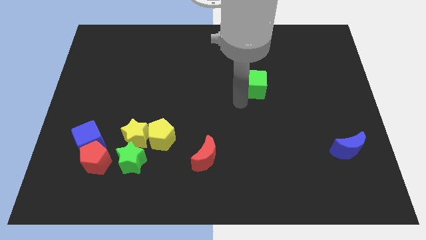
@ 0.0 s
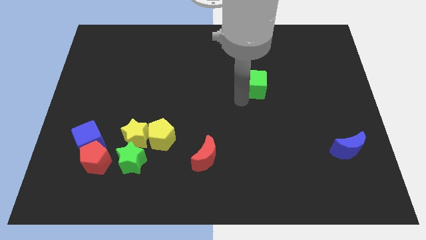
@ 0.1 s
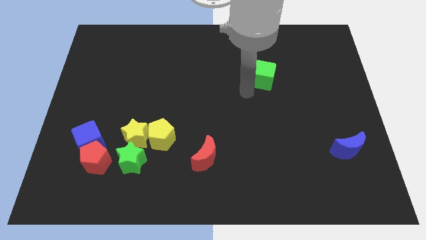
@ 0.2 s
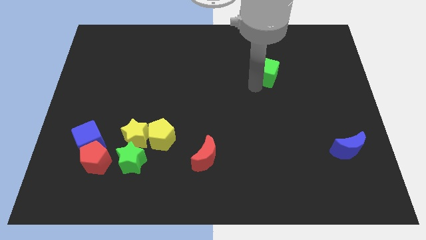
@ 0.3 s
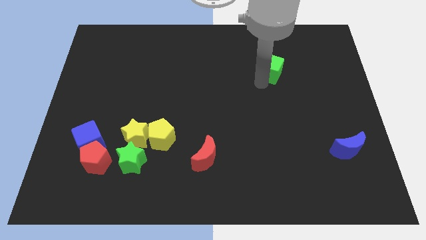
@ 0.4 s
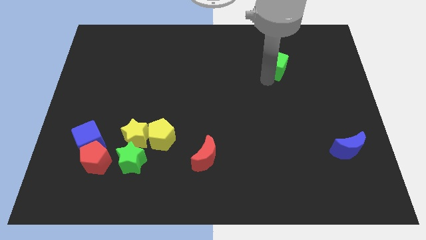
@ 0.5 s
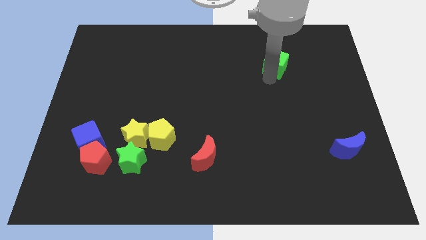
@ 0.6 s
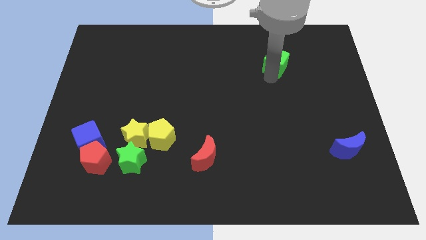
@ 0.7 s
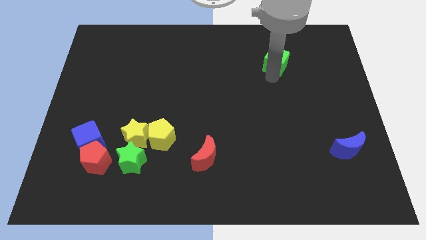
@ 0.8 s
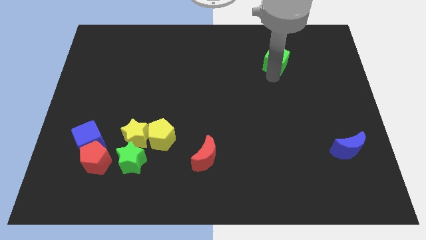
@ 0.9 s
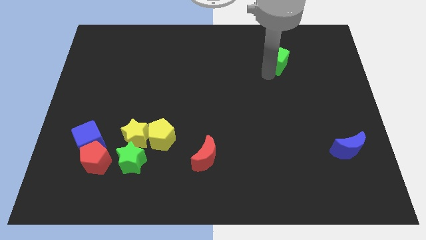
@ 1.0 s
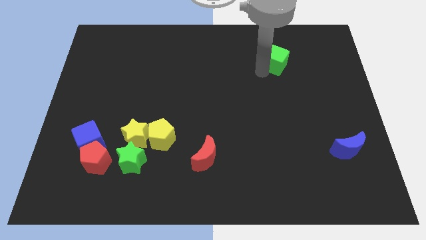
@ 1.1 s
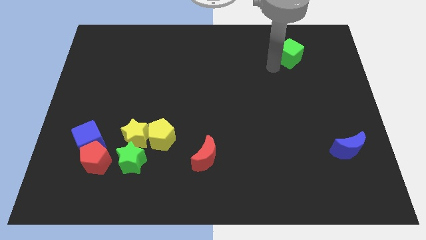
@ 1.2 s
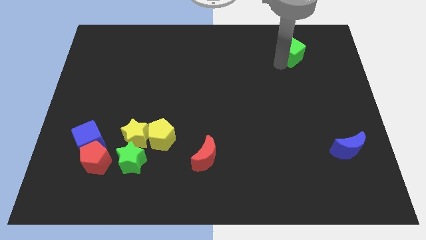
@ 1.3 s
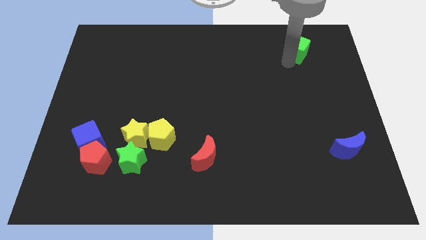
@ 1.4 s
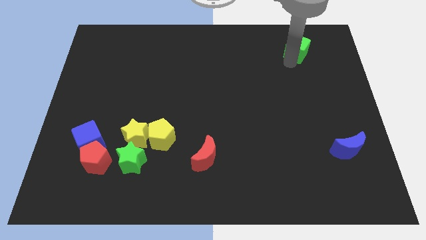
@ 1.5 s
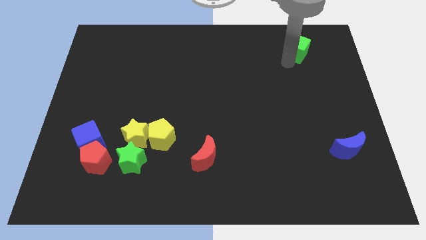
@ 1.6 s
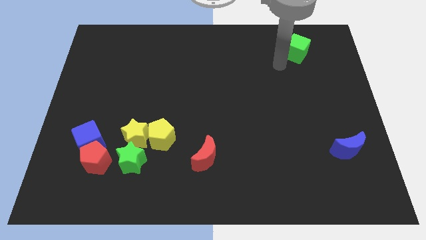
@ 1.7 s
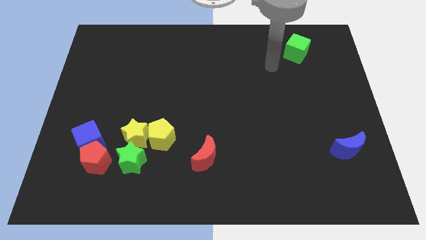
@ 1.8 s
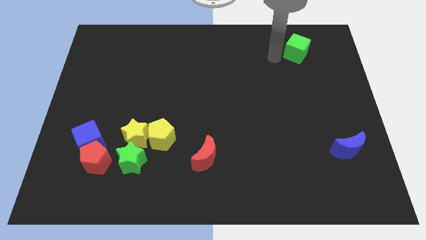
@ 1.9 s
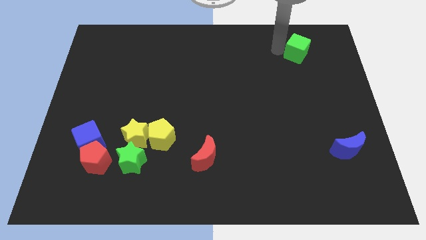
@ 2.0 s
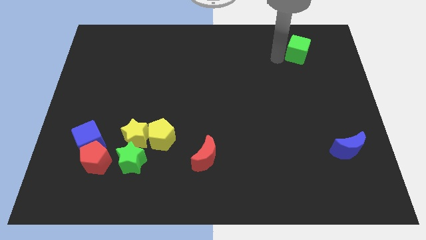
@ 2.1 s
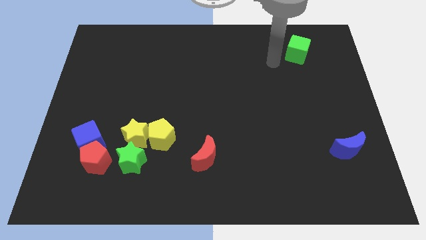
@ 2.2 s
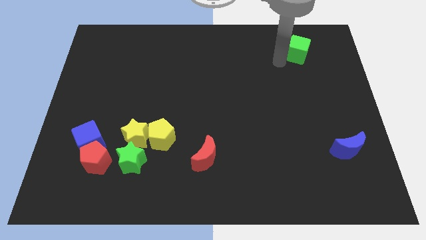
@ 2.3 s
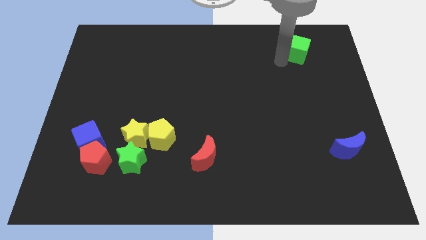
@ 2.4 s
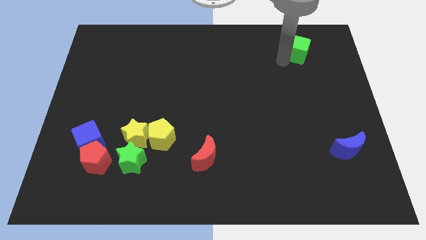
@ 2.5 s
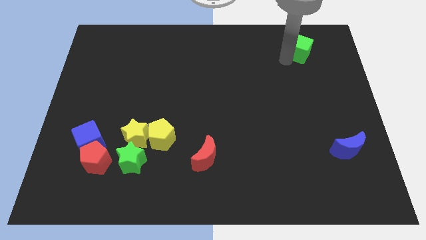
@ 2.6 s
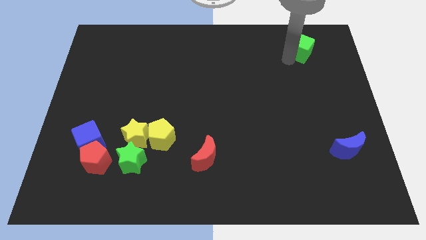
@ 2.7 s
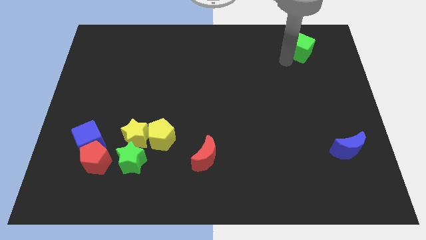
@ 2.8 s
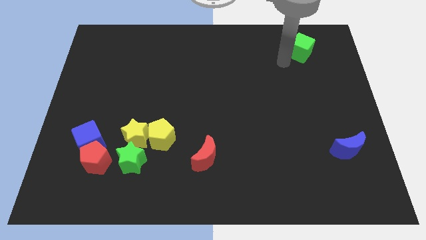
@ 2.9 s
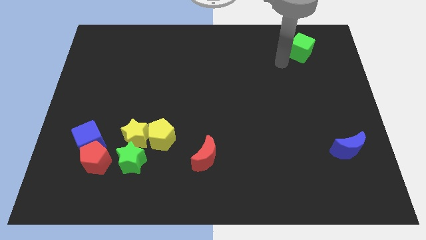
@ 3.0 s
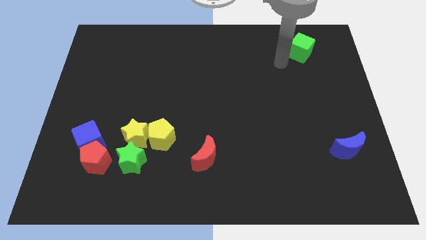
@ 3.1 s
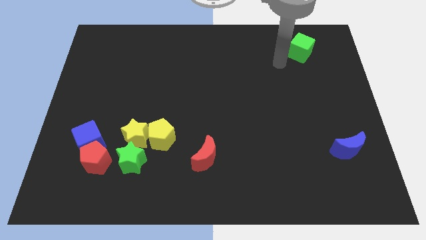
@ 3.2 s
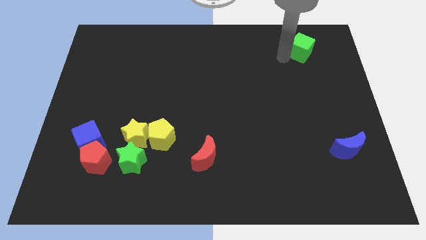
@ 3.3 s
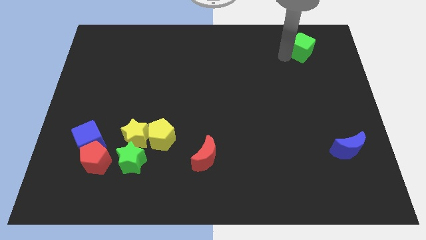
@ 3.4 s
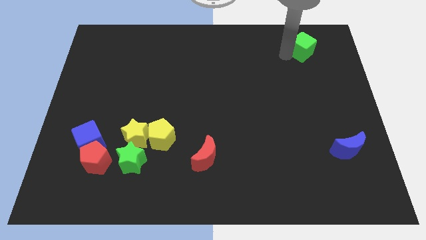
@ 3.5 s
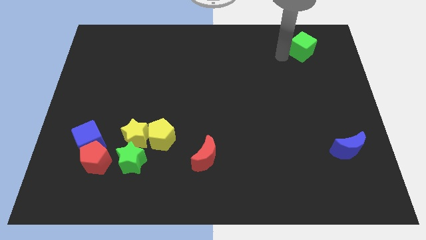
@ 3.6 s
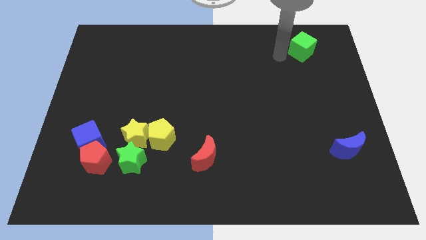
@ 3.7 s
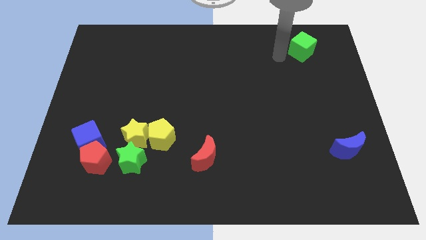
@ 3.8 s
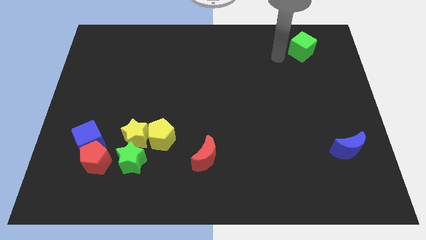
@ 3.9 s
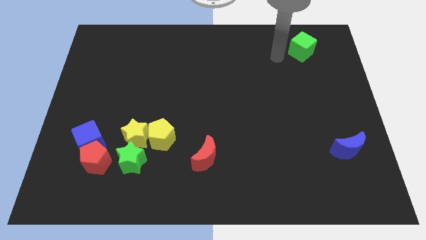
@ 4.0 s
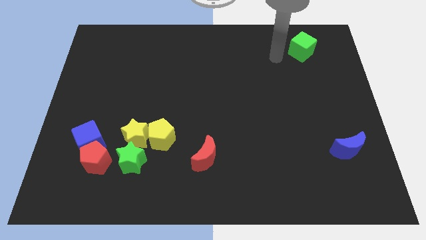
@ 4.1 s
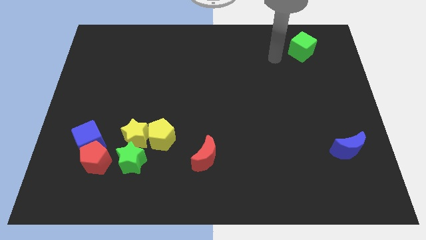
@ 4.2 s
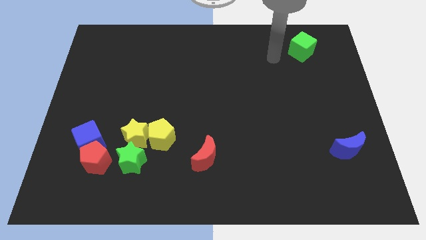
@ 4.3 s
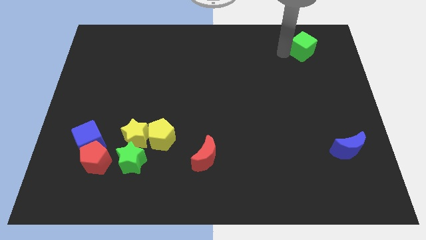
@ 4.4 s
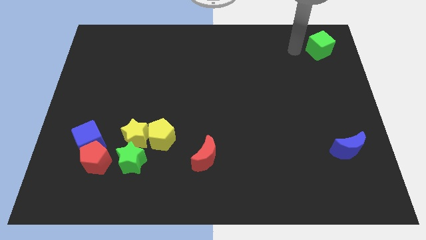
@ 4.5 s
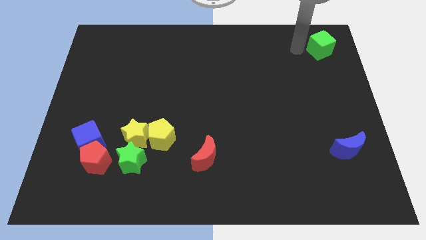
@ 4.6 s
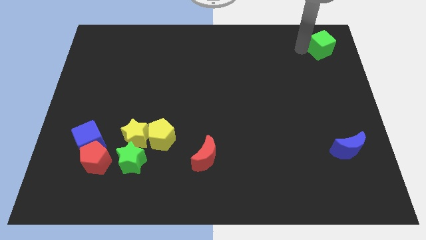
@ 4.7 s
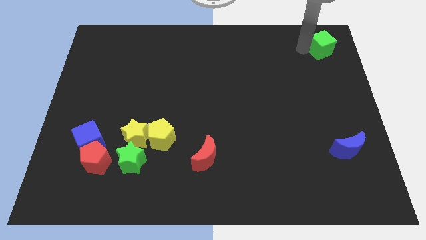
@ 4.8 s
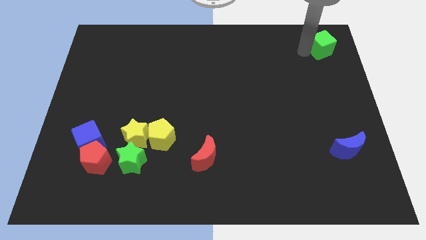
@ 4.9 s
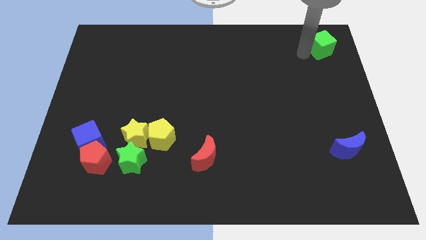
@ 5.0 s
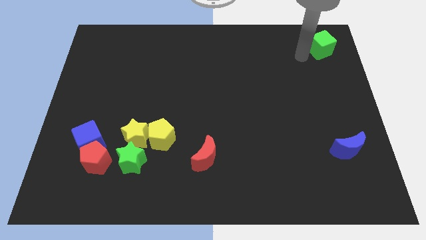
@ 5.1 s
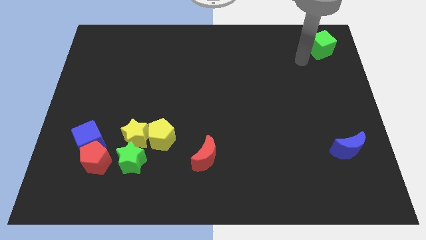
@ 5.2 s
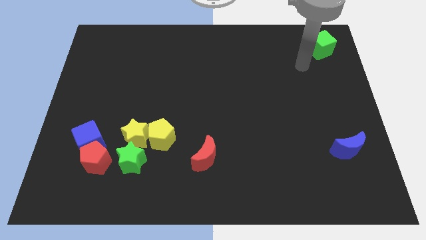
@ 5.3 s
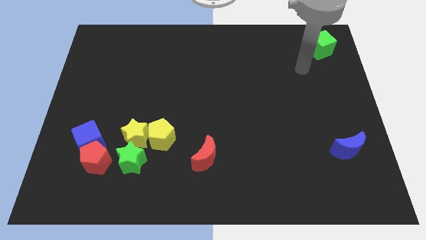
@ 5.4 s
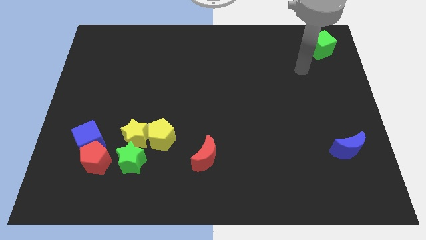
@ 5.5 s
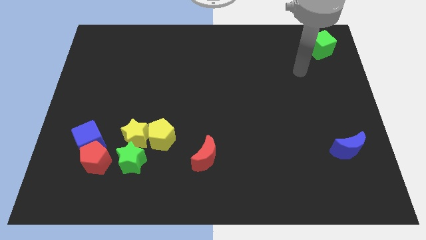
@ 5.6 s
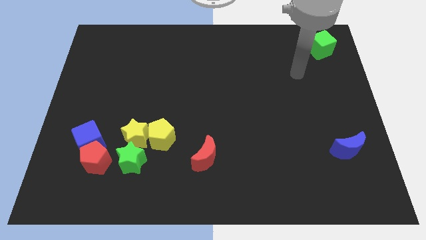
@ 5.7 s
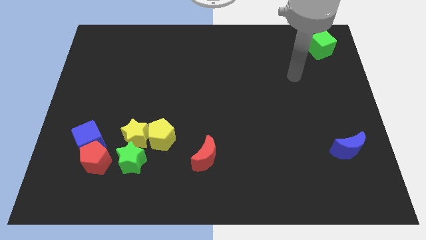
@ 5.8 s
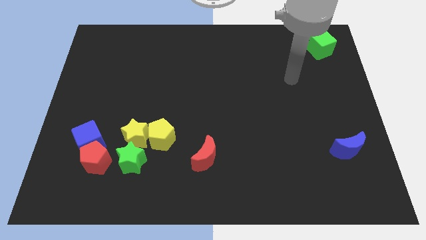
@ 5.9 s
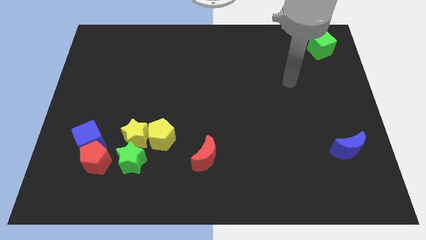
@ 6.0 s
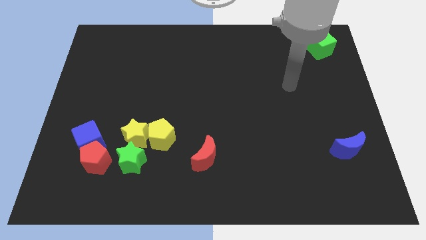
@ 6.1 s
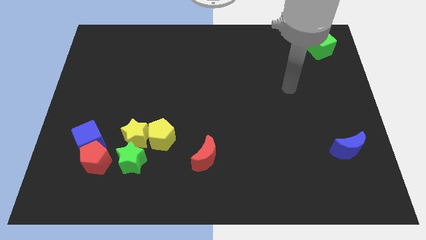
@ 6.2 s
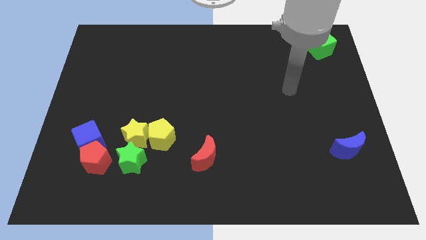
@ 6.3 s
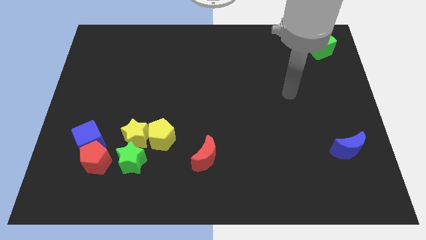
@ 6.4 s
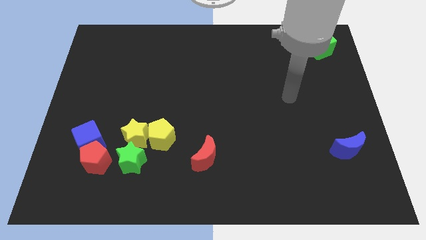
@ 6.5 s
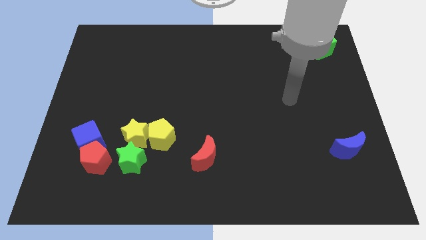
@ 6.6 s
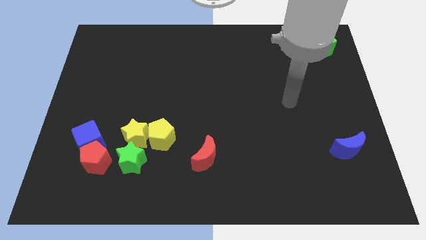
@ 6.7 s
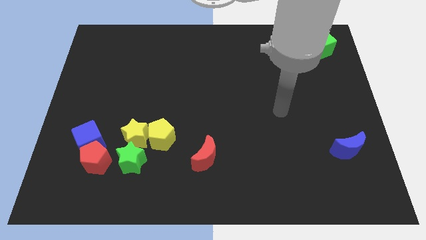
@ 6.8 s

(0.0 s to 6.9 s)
move the green cube to the top right

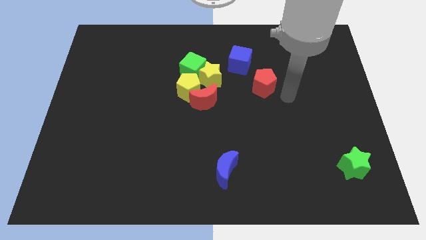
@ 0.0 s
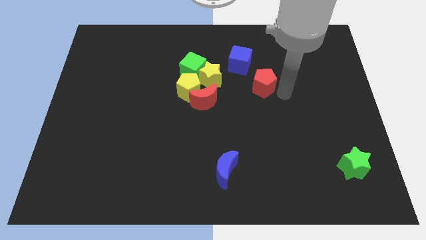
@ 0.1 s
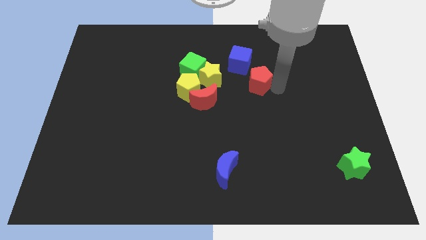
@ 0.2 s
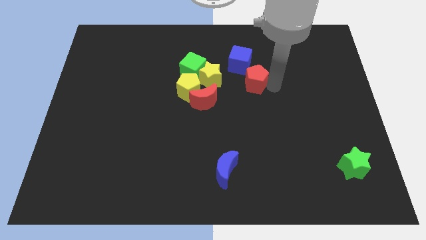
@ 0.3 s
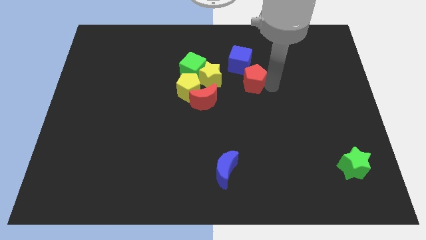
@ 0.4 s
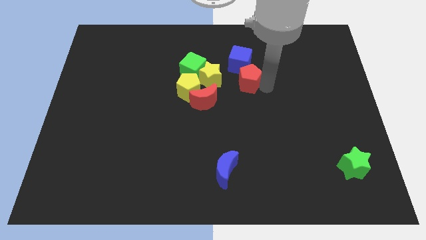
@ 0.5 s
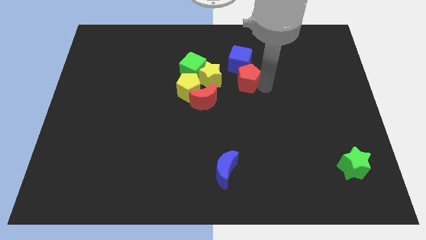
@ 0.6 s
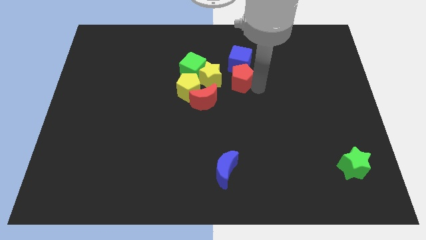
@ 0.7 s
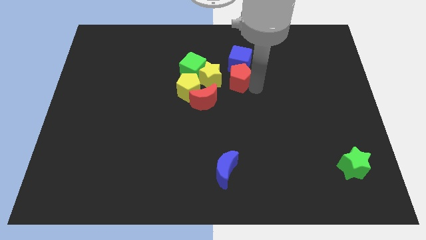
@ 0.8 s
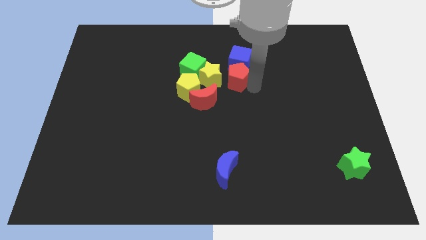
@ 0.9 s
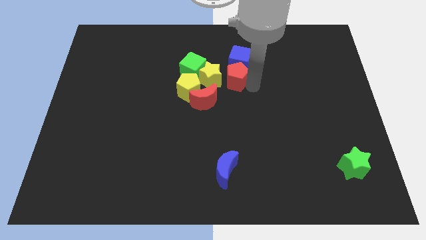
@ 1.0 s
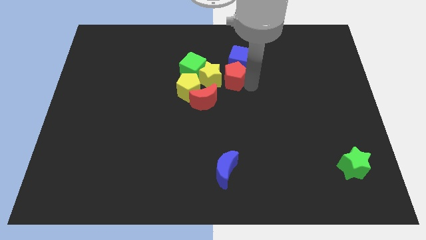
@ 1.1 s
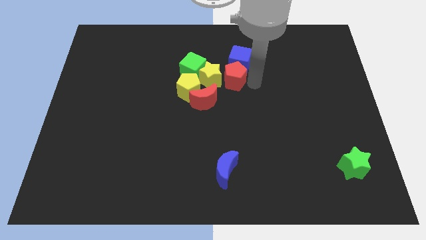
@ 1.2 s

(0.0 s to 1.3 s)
move the red pentagon vertically below the blue cube

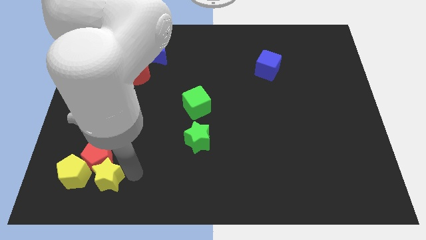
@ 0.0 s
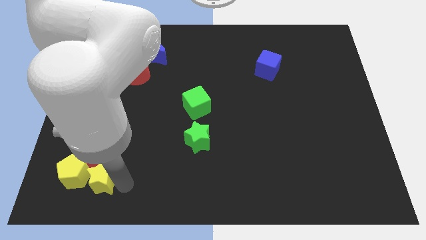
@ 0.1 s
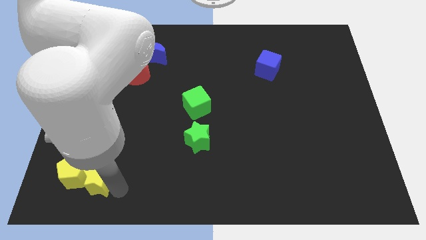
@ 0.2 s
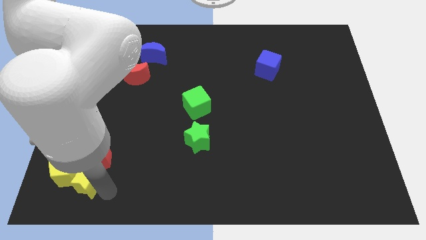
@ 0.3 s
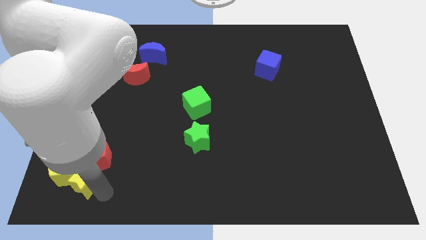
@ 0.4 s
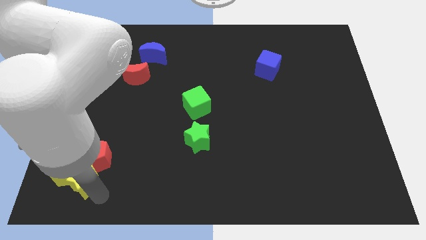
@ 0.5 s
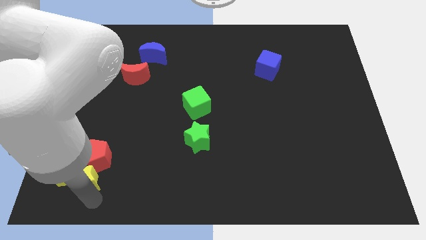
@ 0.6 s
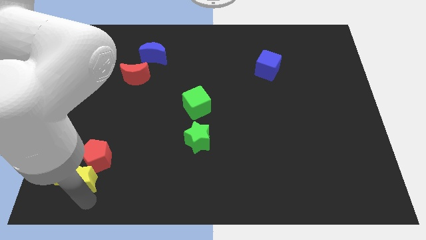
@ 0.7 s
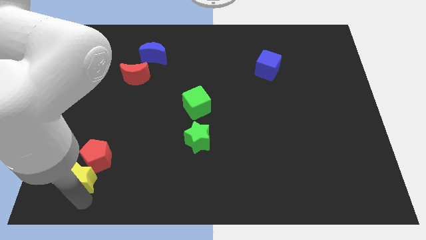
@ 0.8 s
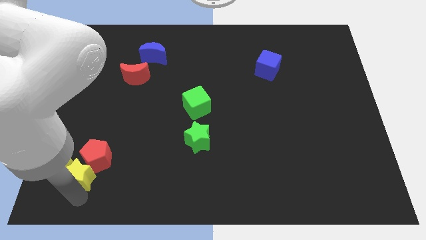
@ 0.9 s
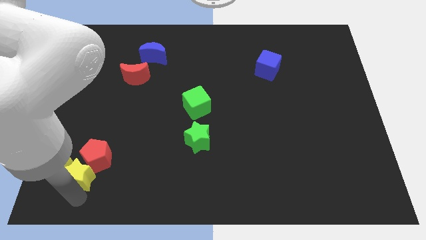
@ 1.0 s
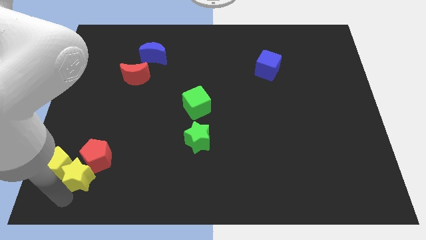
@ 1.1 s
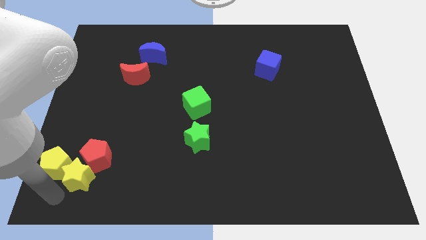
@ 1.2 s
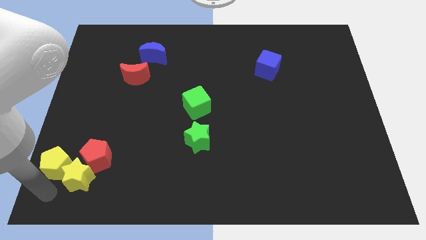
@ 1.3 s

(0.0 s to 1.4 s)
move the yellow star into the yellow pentagon
